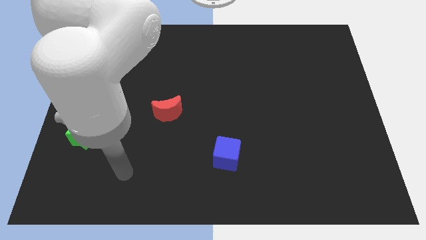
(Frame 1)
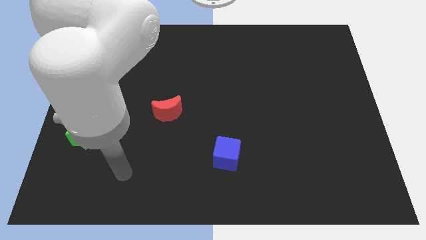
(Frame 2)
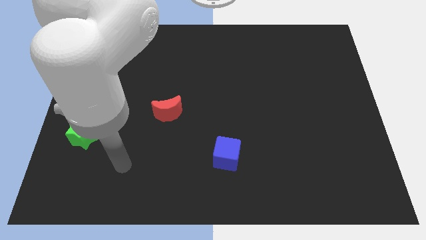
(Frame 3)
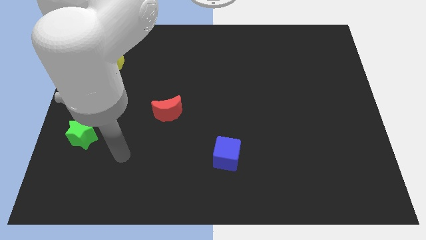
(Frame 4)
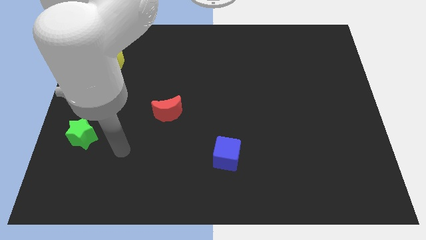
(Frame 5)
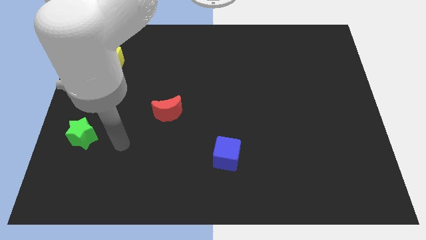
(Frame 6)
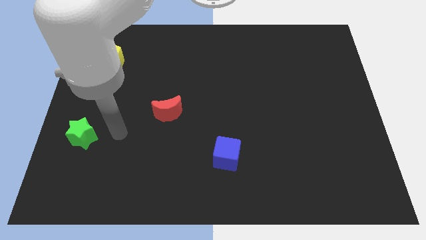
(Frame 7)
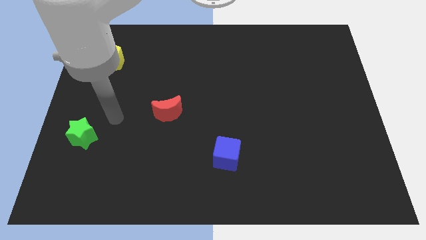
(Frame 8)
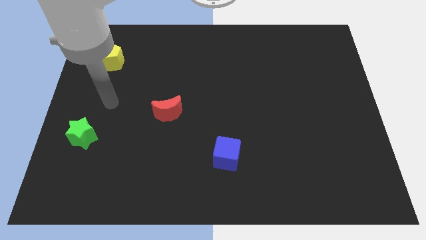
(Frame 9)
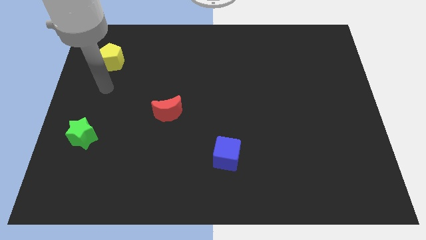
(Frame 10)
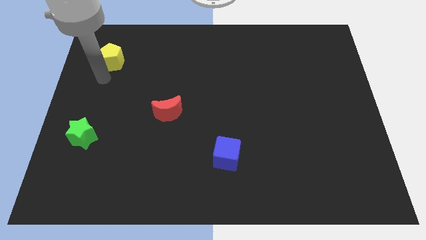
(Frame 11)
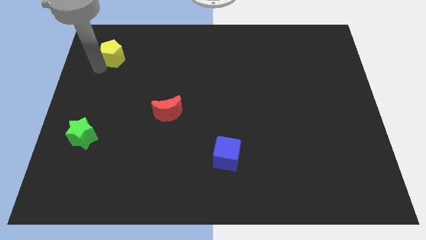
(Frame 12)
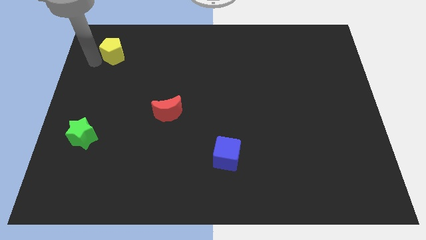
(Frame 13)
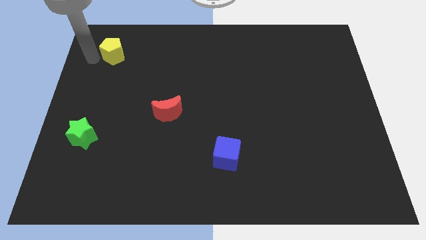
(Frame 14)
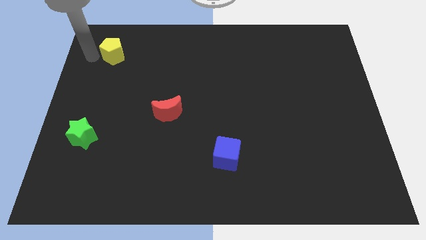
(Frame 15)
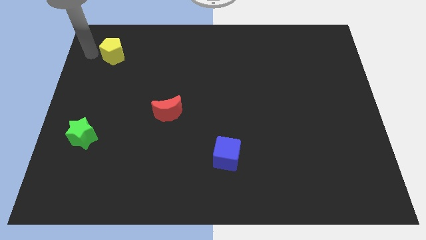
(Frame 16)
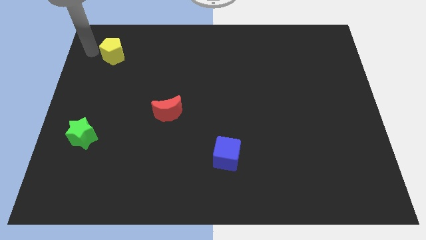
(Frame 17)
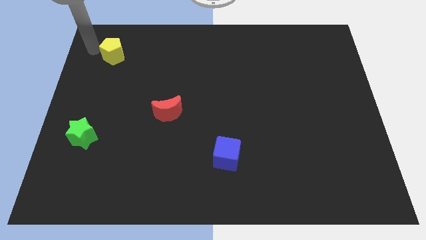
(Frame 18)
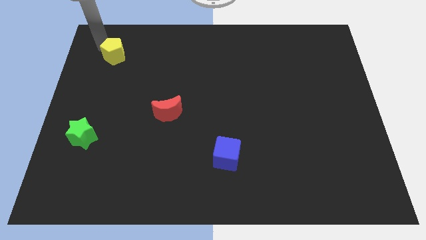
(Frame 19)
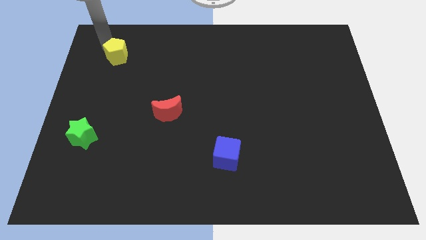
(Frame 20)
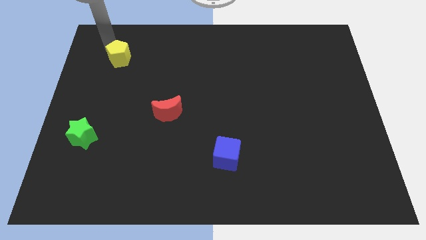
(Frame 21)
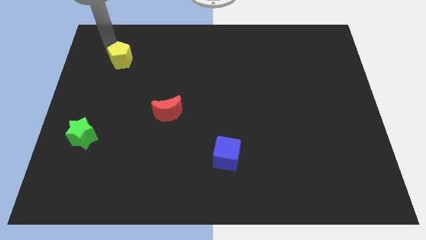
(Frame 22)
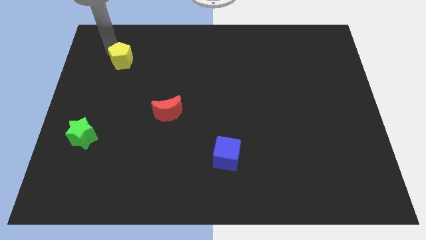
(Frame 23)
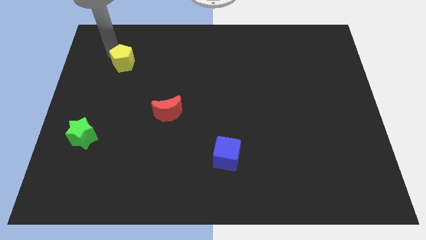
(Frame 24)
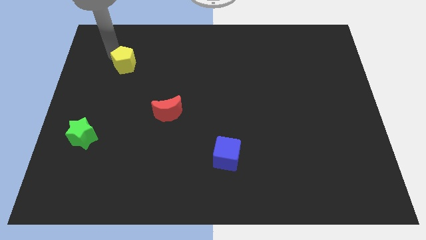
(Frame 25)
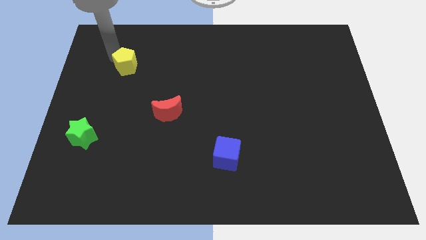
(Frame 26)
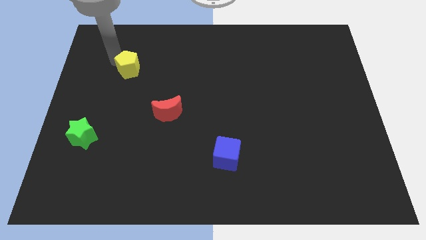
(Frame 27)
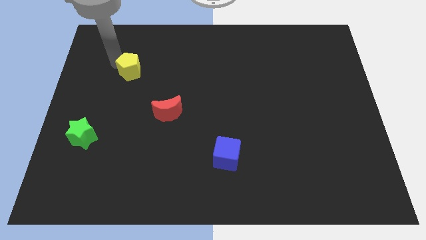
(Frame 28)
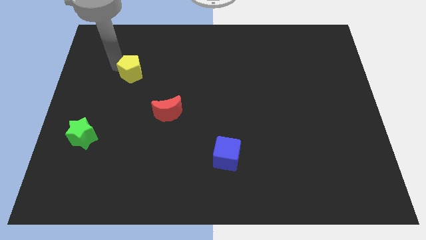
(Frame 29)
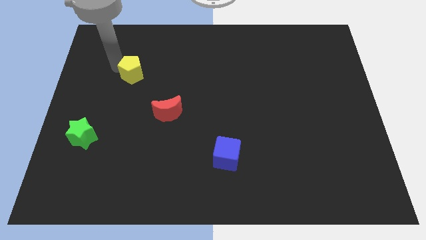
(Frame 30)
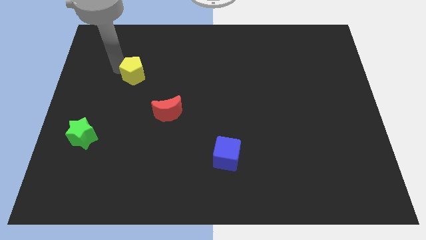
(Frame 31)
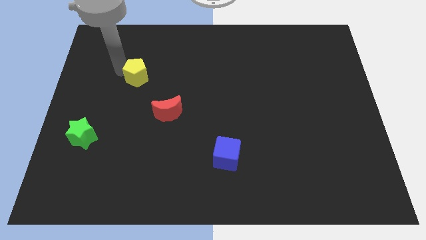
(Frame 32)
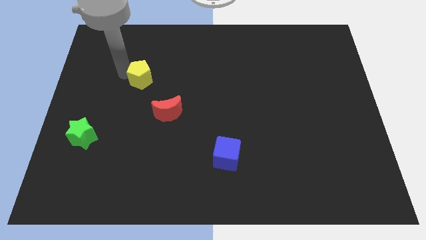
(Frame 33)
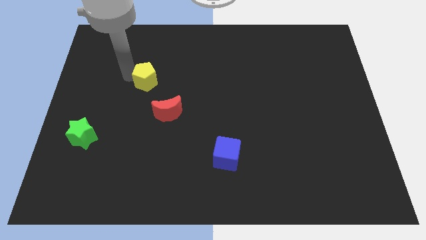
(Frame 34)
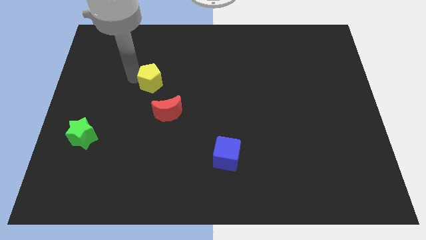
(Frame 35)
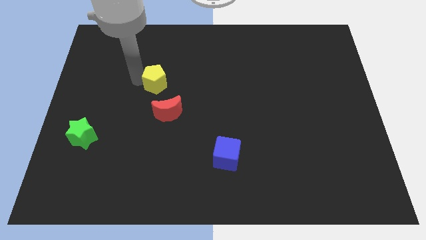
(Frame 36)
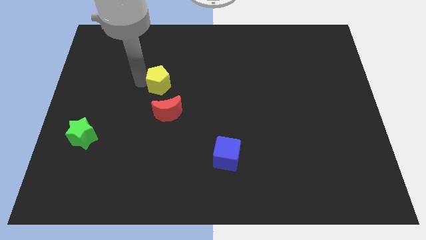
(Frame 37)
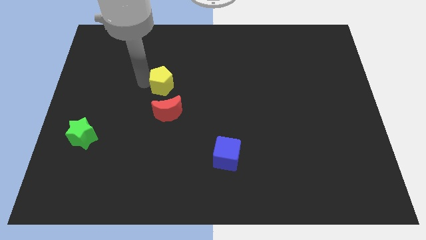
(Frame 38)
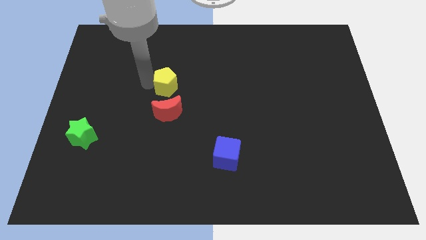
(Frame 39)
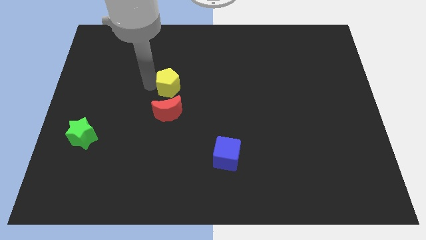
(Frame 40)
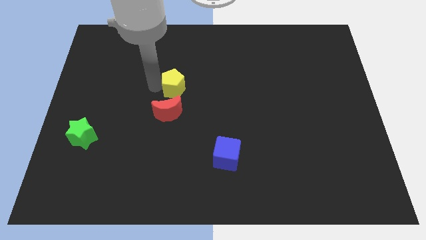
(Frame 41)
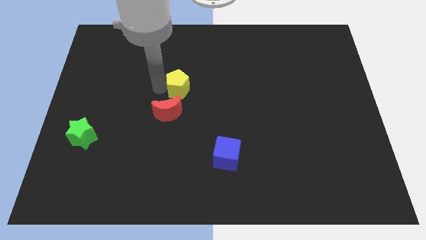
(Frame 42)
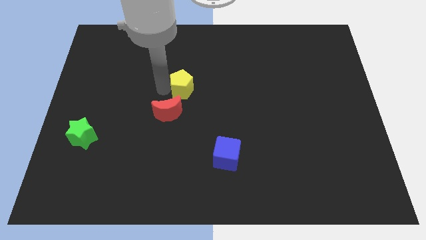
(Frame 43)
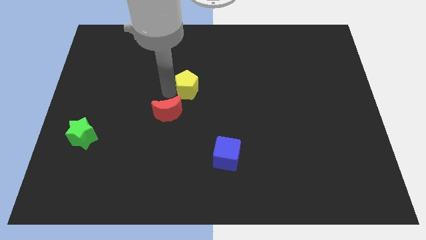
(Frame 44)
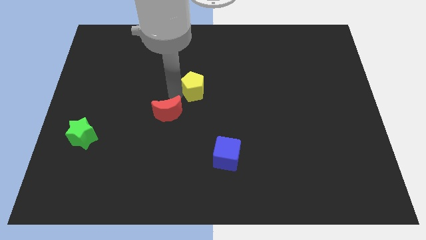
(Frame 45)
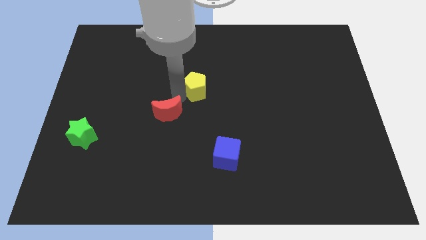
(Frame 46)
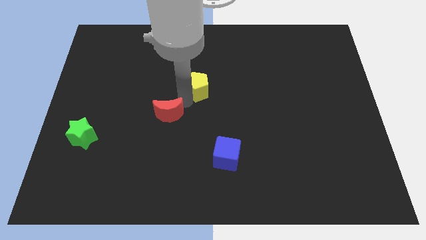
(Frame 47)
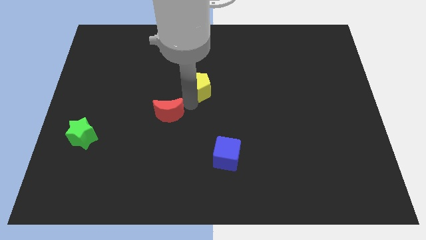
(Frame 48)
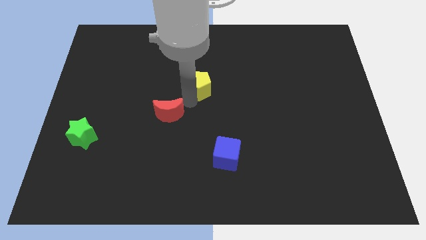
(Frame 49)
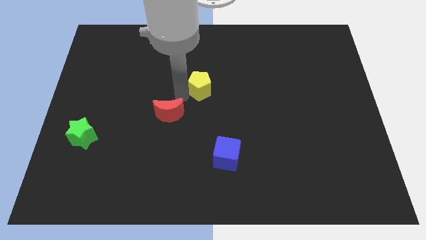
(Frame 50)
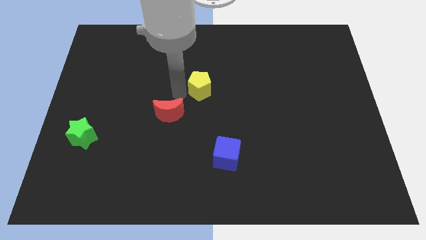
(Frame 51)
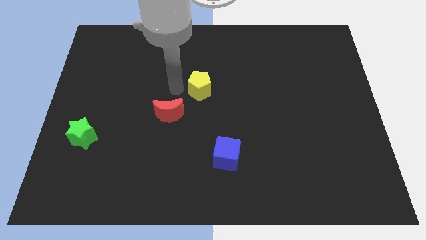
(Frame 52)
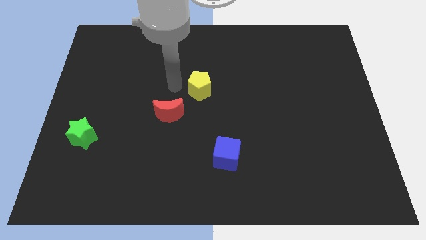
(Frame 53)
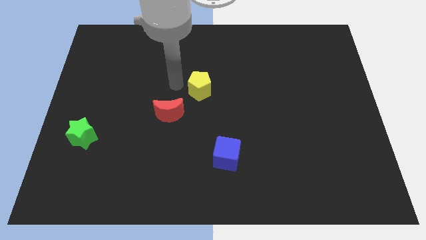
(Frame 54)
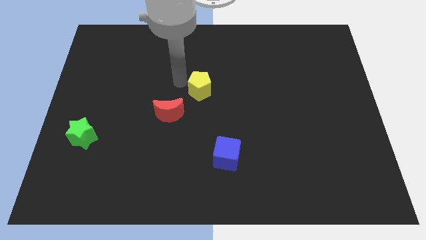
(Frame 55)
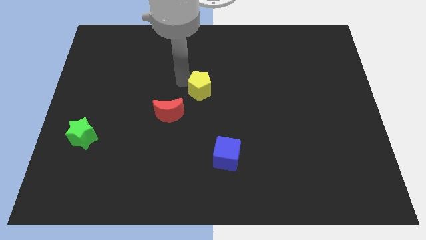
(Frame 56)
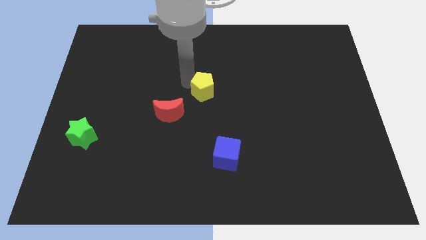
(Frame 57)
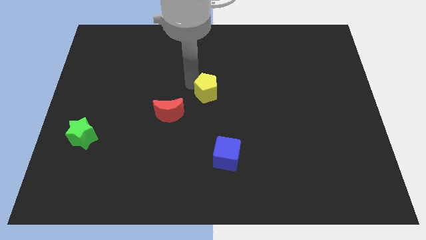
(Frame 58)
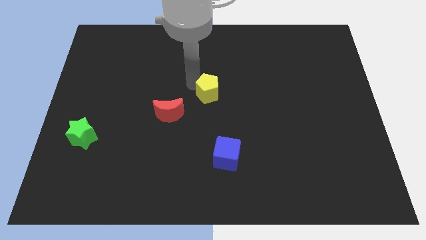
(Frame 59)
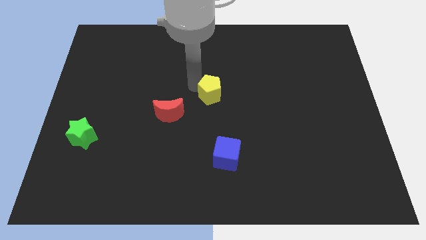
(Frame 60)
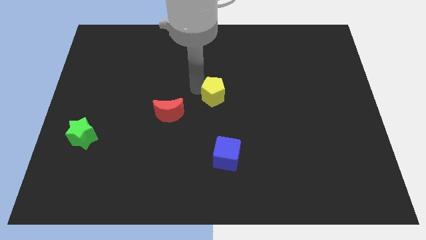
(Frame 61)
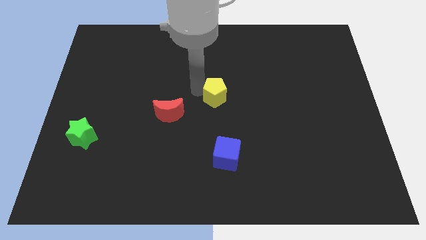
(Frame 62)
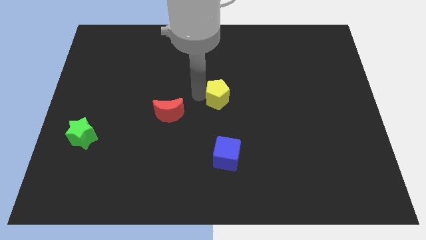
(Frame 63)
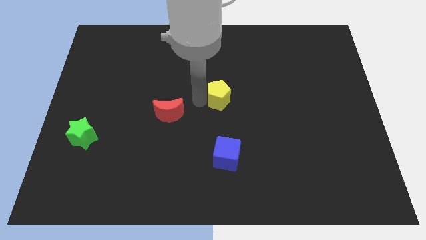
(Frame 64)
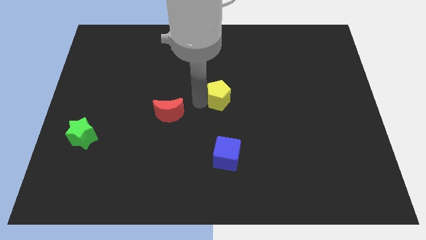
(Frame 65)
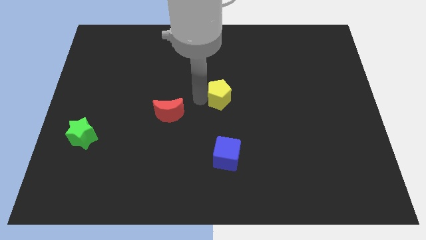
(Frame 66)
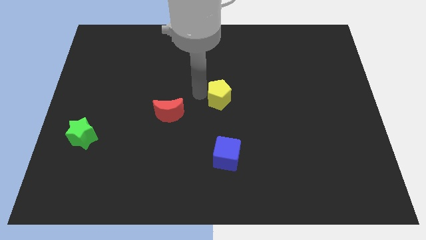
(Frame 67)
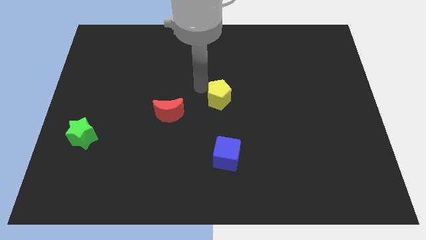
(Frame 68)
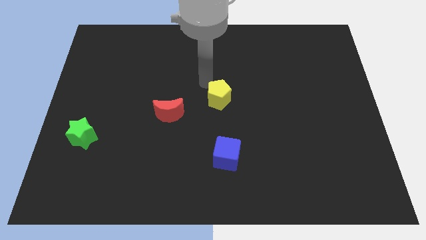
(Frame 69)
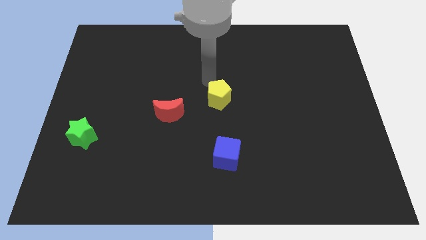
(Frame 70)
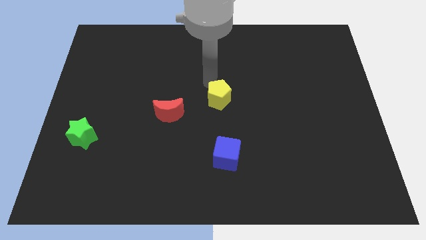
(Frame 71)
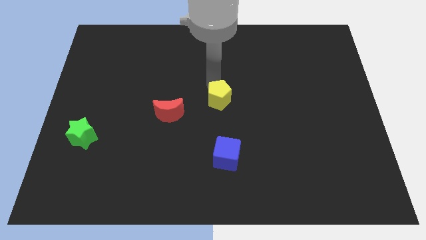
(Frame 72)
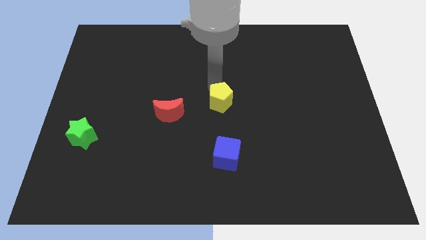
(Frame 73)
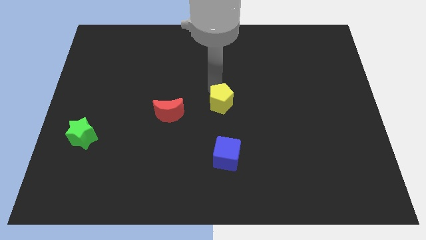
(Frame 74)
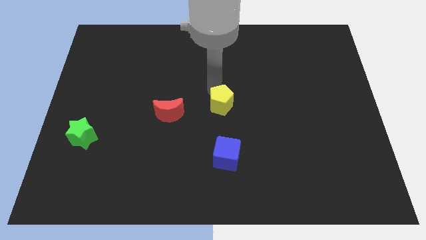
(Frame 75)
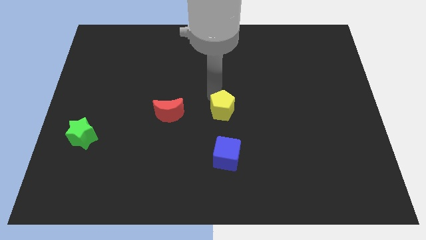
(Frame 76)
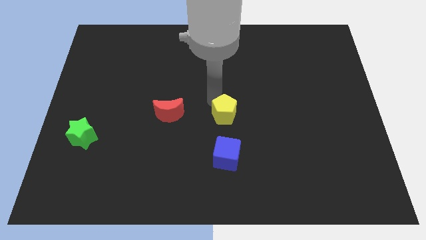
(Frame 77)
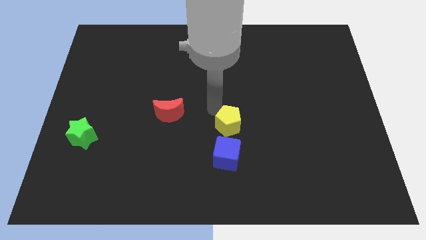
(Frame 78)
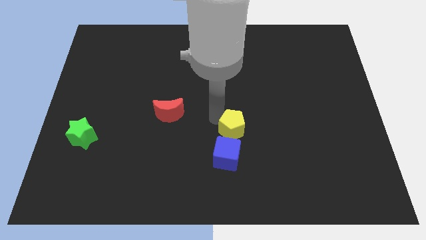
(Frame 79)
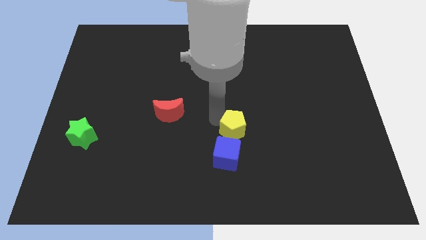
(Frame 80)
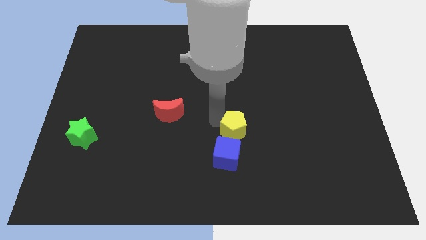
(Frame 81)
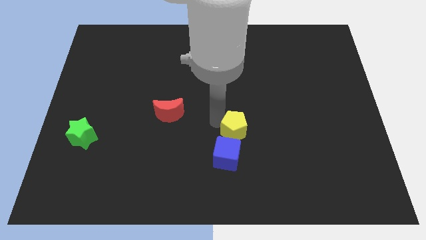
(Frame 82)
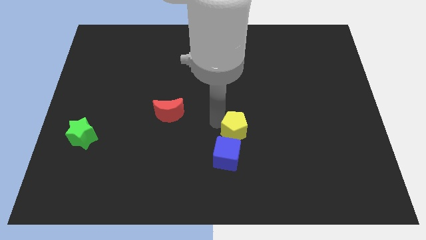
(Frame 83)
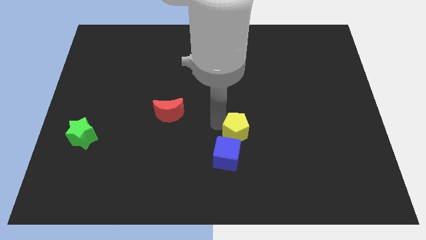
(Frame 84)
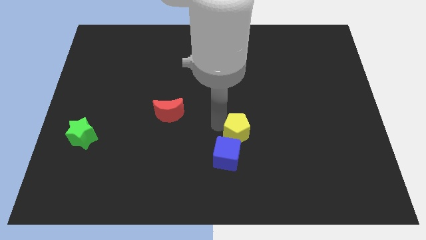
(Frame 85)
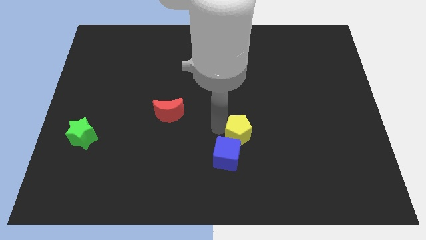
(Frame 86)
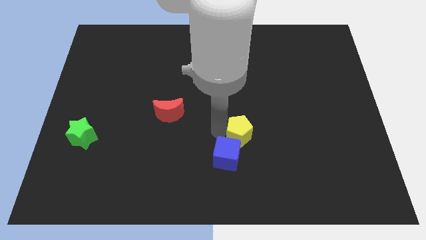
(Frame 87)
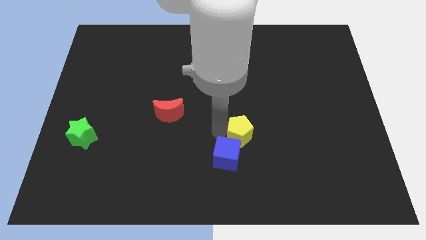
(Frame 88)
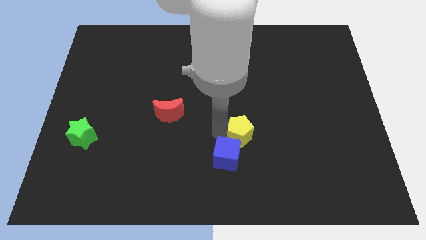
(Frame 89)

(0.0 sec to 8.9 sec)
push the yellow block to the cube

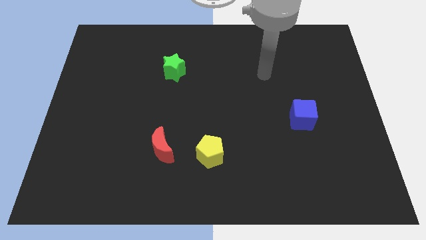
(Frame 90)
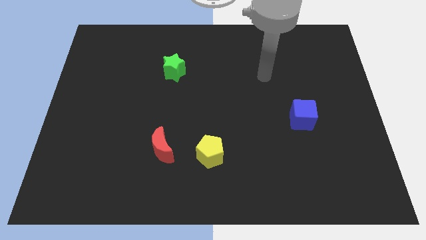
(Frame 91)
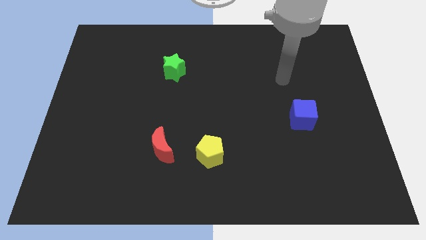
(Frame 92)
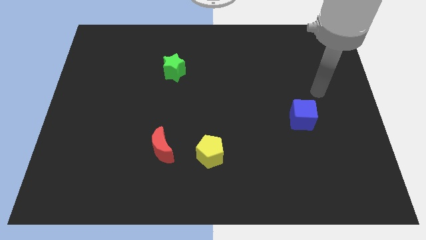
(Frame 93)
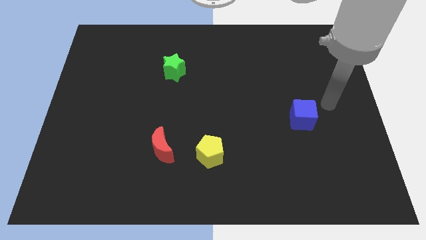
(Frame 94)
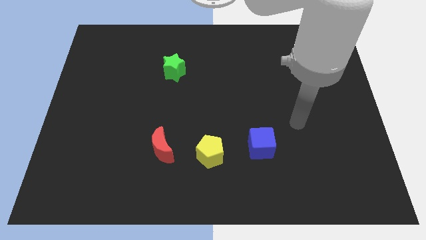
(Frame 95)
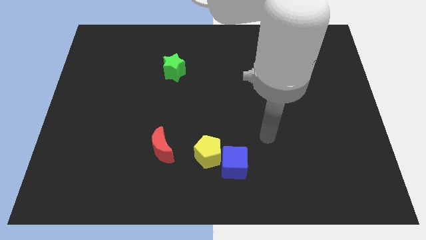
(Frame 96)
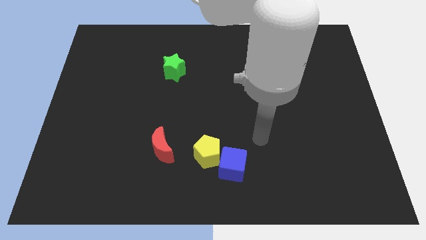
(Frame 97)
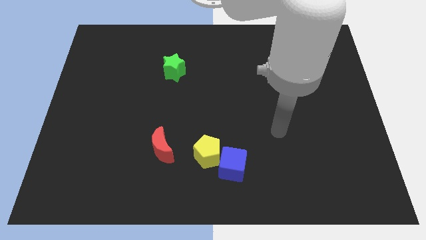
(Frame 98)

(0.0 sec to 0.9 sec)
push the blue cube towards the yellow pentagon
